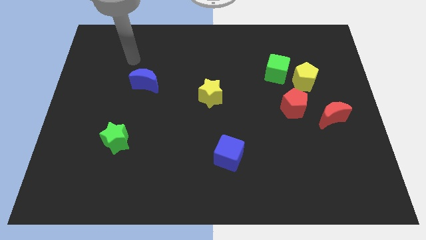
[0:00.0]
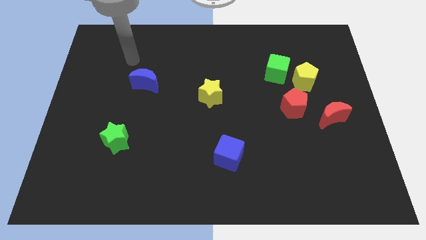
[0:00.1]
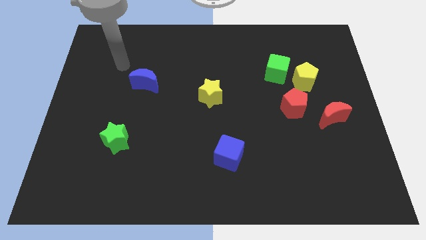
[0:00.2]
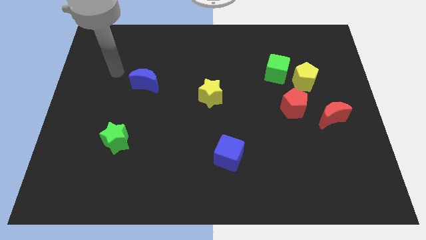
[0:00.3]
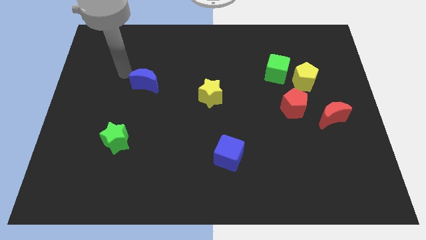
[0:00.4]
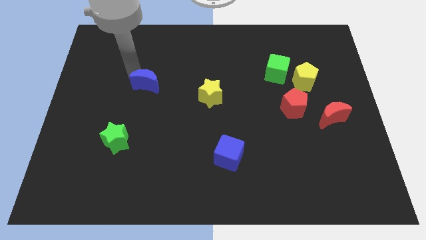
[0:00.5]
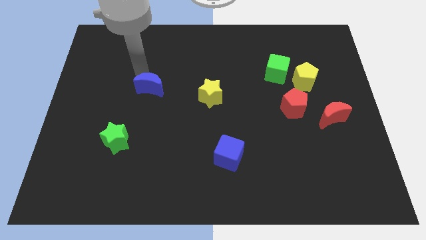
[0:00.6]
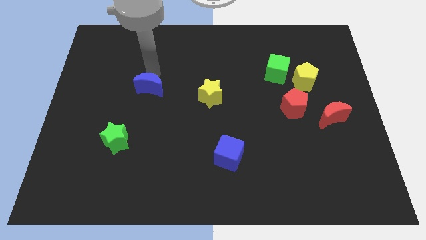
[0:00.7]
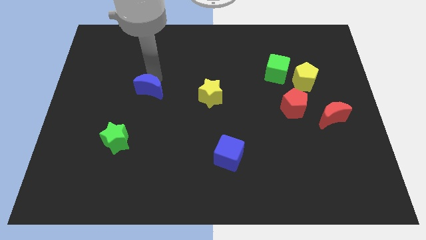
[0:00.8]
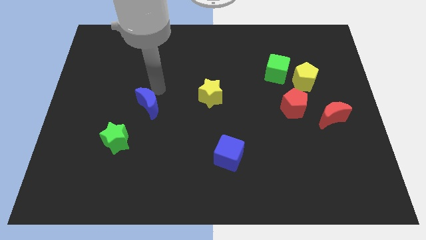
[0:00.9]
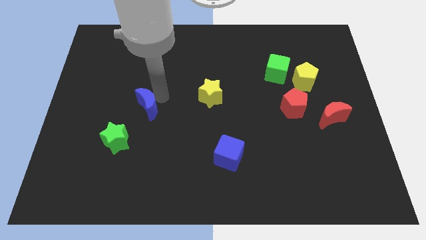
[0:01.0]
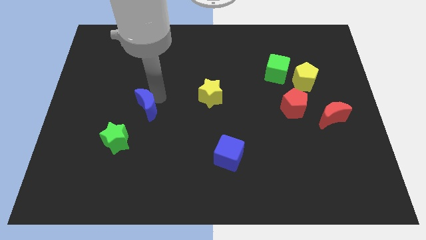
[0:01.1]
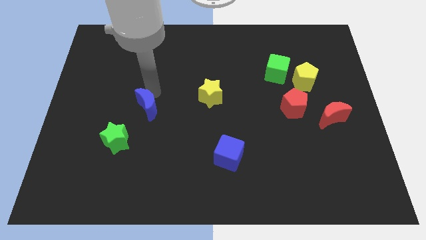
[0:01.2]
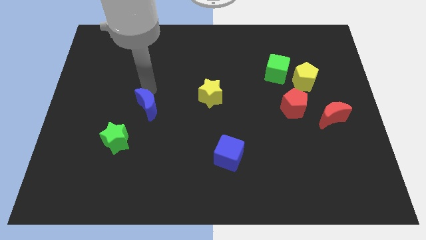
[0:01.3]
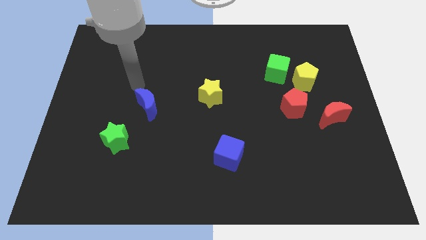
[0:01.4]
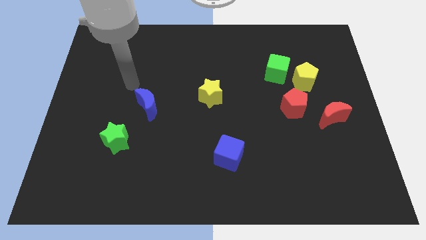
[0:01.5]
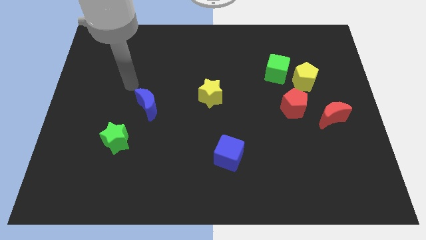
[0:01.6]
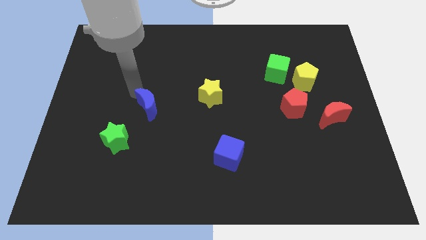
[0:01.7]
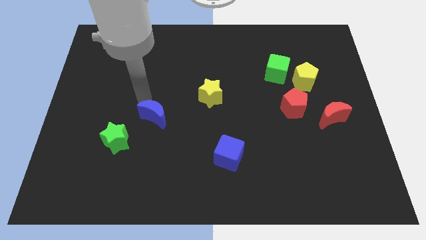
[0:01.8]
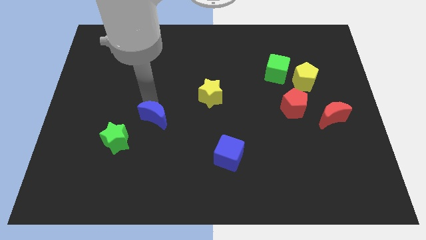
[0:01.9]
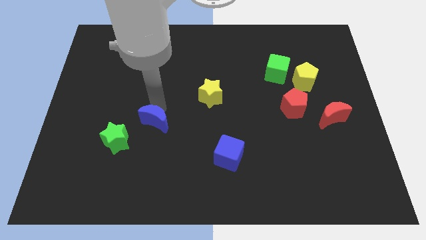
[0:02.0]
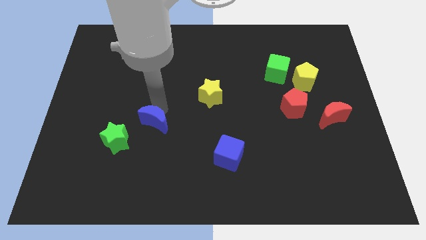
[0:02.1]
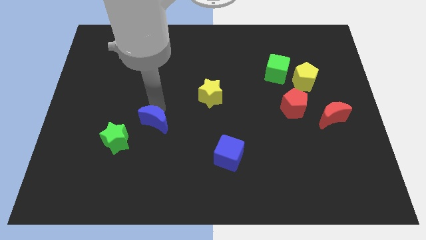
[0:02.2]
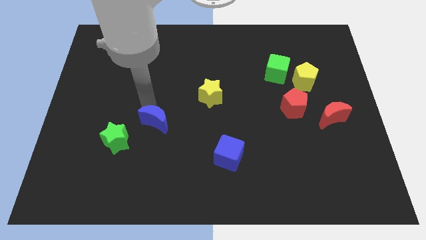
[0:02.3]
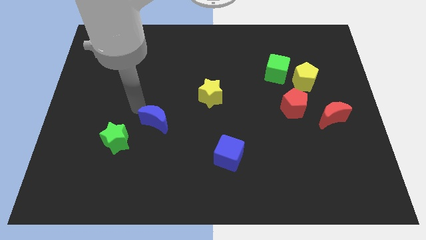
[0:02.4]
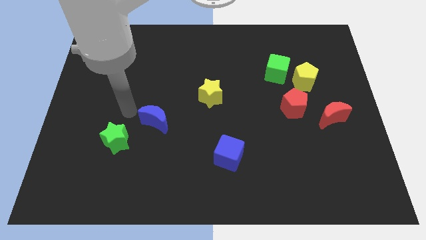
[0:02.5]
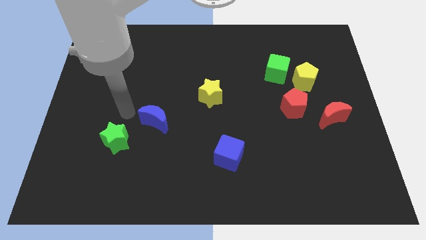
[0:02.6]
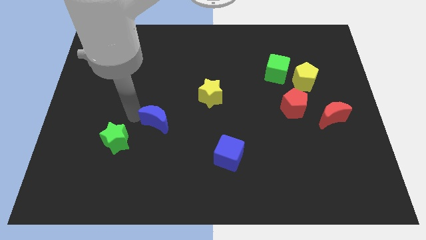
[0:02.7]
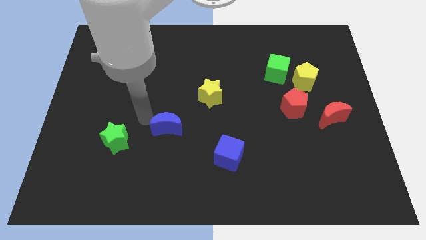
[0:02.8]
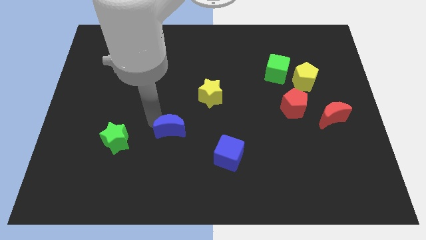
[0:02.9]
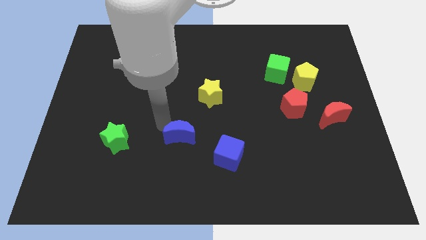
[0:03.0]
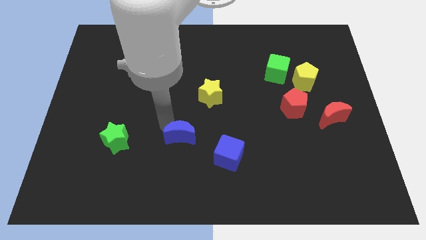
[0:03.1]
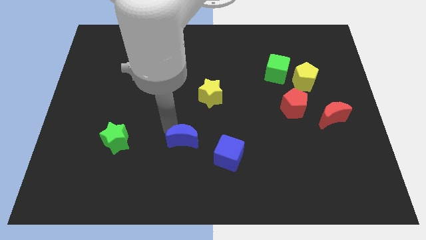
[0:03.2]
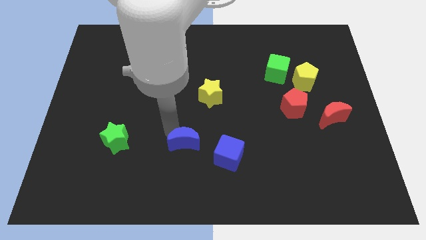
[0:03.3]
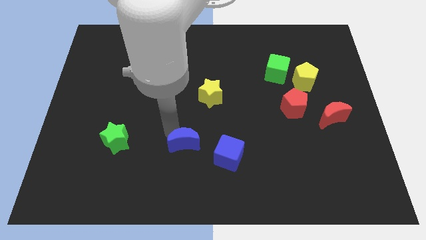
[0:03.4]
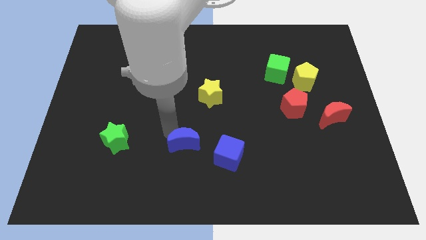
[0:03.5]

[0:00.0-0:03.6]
push the blue crescent towards blue cube

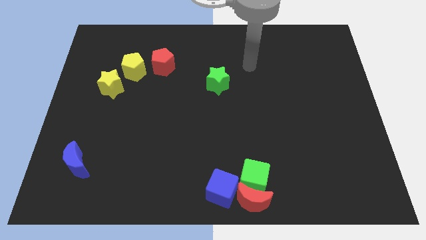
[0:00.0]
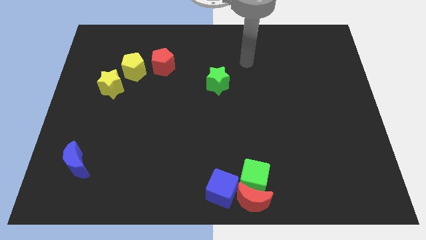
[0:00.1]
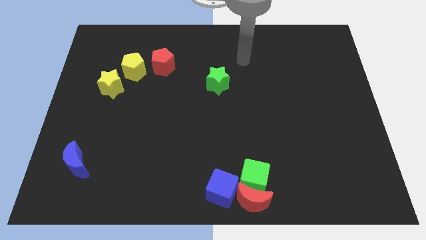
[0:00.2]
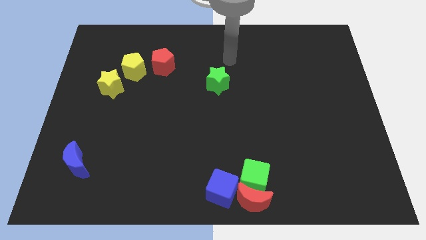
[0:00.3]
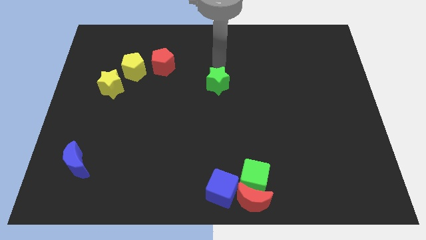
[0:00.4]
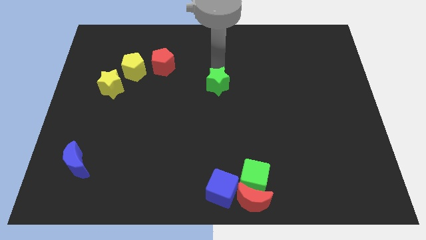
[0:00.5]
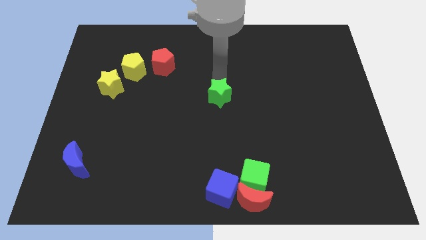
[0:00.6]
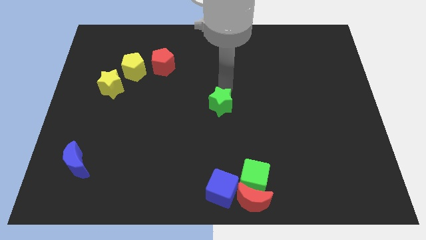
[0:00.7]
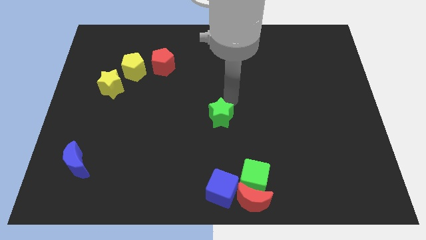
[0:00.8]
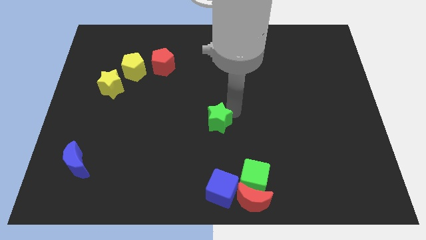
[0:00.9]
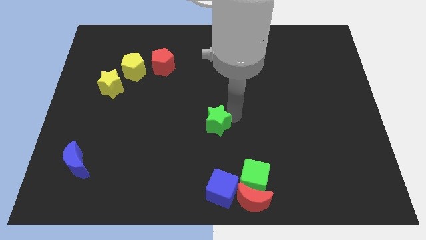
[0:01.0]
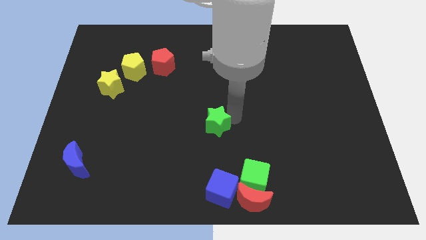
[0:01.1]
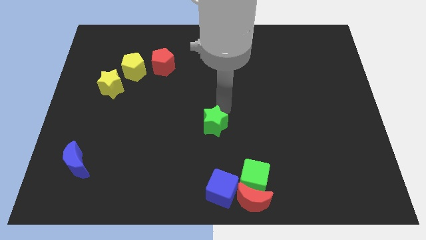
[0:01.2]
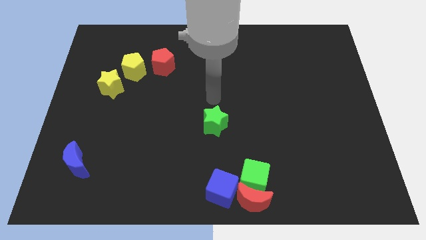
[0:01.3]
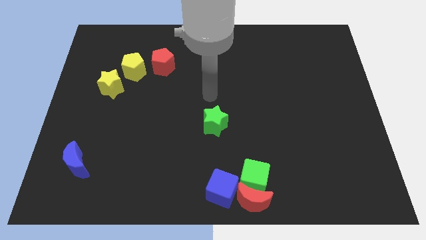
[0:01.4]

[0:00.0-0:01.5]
push the green star downwards

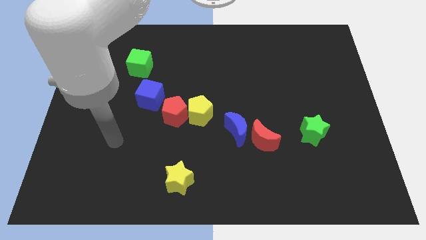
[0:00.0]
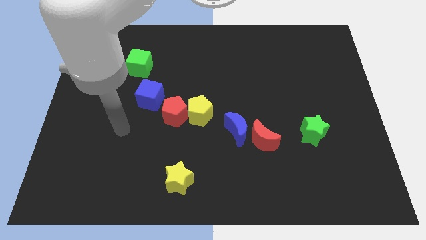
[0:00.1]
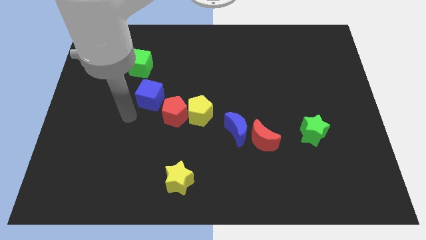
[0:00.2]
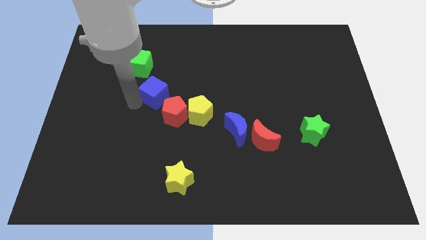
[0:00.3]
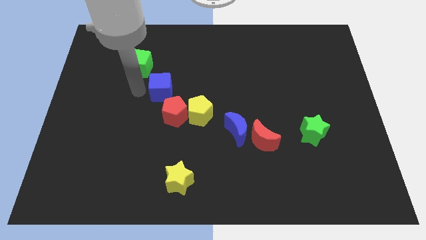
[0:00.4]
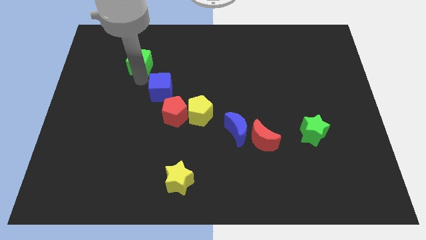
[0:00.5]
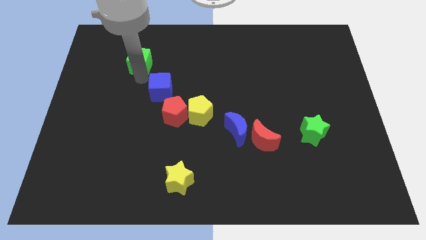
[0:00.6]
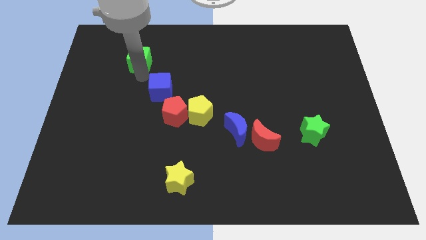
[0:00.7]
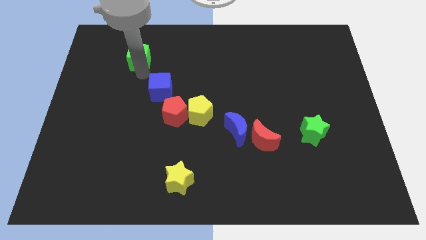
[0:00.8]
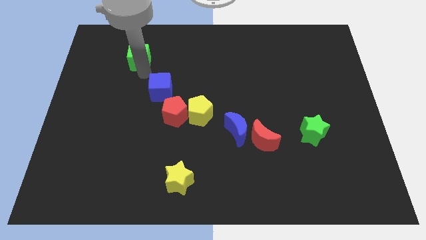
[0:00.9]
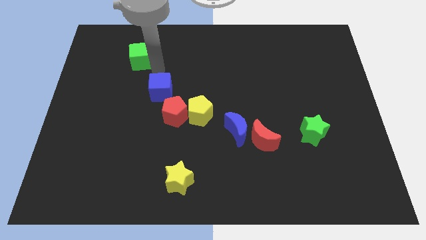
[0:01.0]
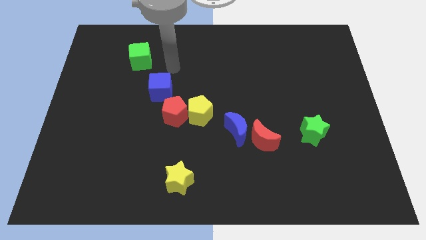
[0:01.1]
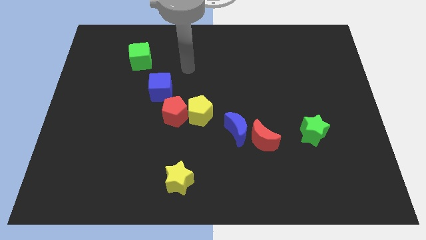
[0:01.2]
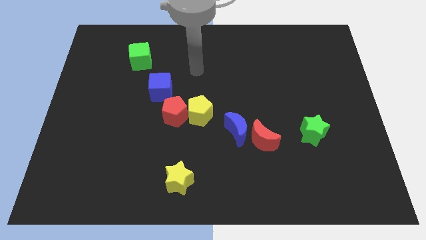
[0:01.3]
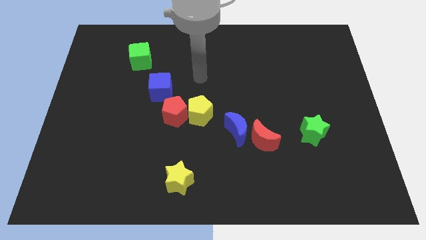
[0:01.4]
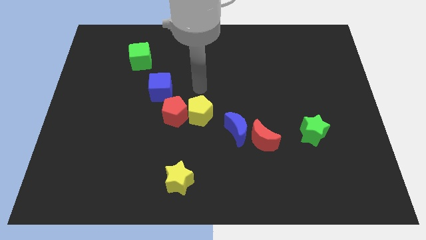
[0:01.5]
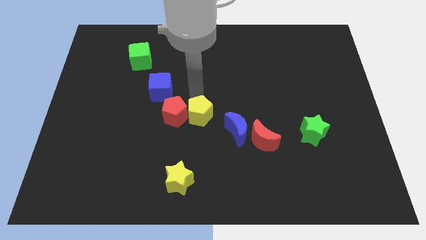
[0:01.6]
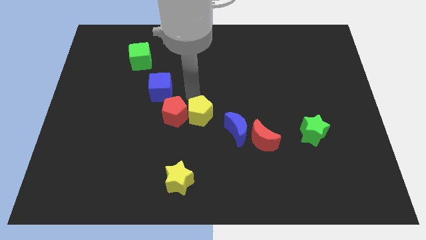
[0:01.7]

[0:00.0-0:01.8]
slightly push the green cube towards up

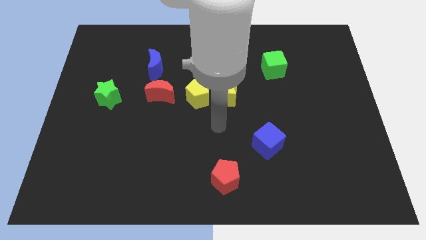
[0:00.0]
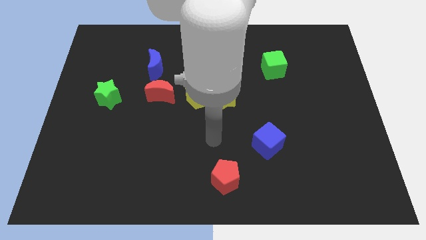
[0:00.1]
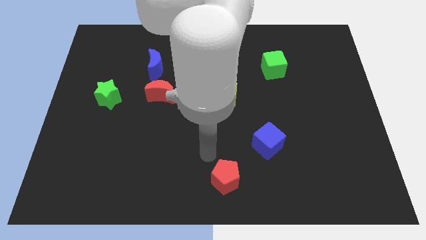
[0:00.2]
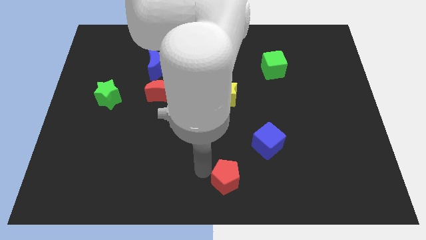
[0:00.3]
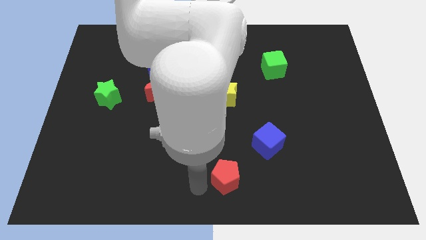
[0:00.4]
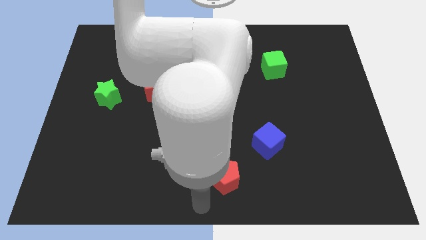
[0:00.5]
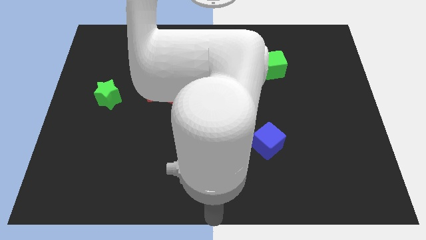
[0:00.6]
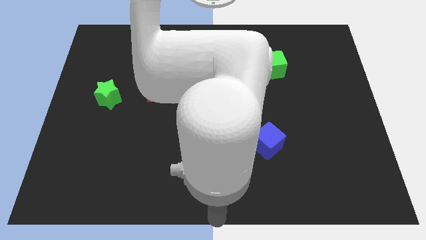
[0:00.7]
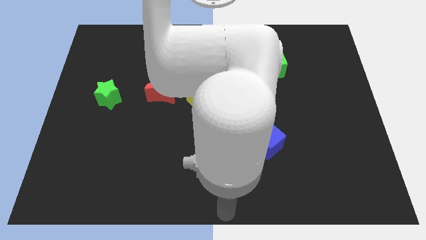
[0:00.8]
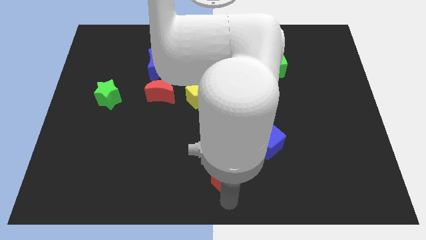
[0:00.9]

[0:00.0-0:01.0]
place arm at the bottom of red pentagon

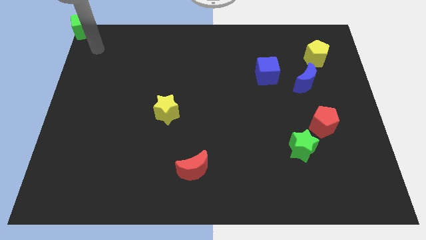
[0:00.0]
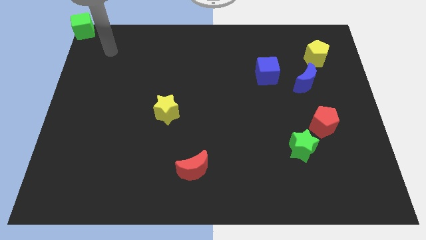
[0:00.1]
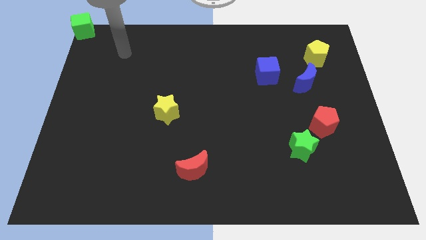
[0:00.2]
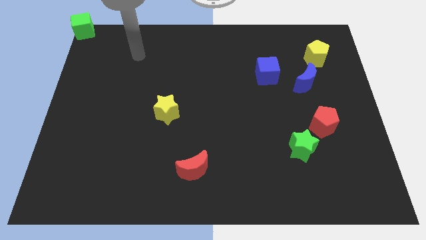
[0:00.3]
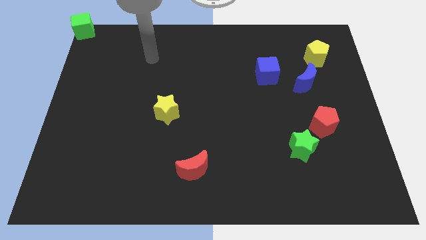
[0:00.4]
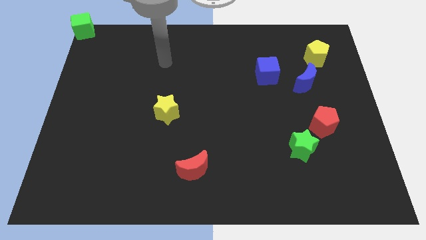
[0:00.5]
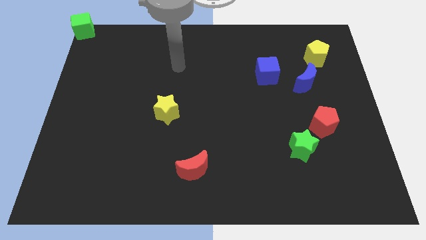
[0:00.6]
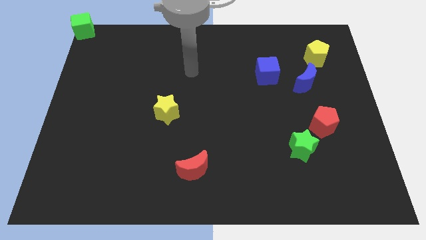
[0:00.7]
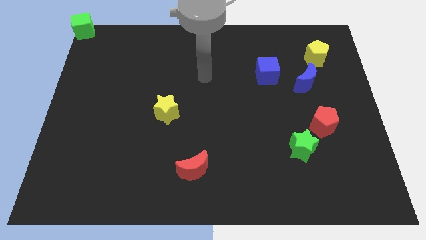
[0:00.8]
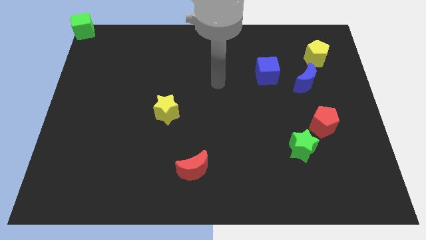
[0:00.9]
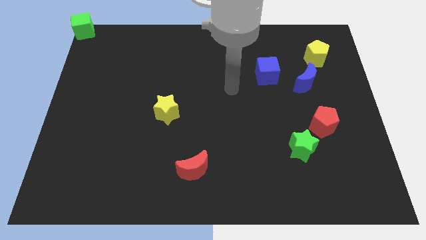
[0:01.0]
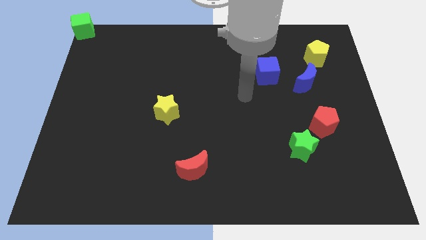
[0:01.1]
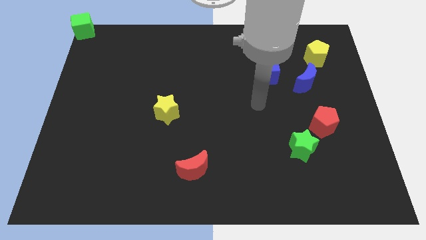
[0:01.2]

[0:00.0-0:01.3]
go away from the green cube
